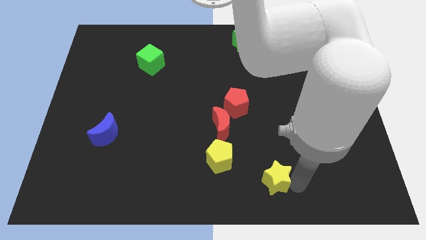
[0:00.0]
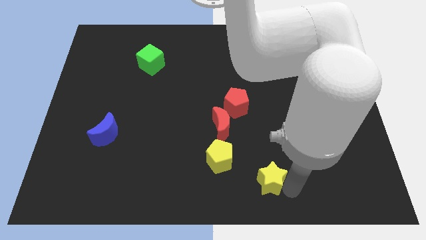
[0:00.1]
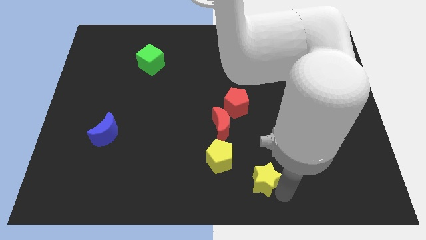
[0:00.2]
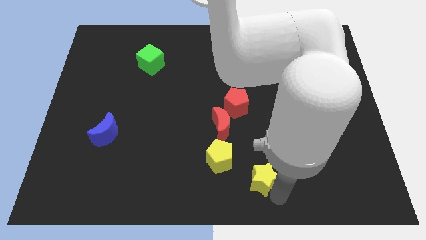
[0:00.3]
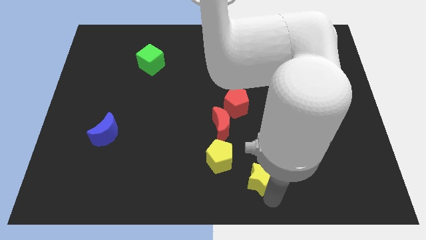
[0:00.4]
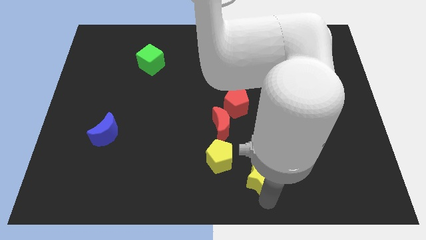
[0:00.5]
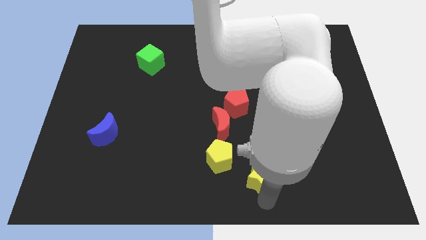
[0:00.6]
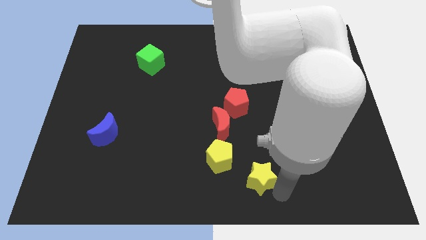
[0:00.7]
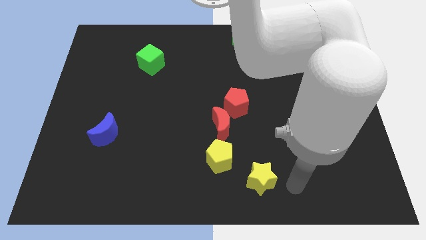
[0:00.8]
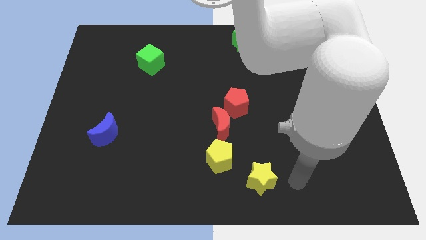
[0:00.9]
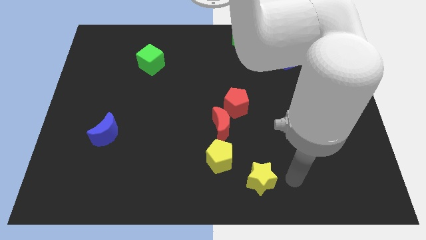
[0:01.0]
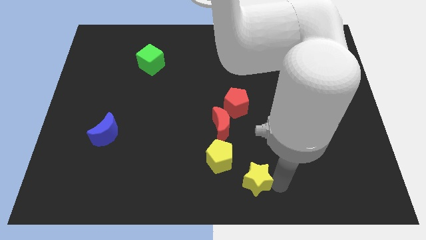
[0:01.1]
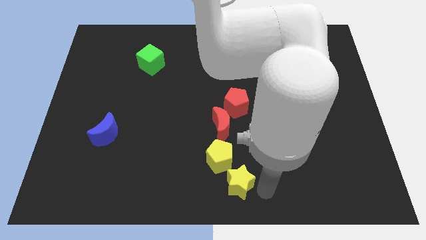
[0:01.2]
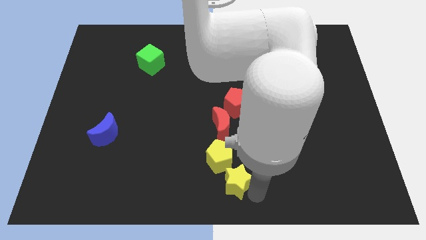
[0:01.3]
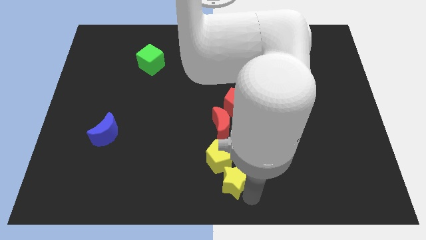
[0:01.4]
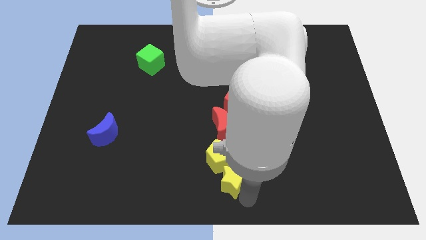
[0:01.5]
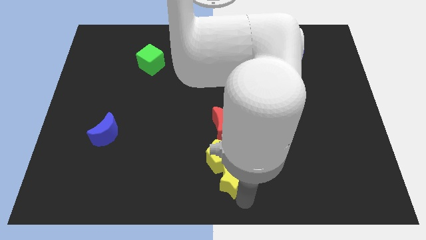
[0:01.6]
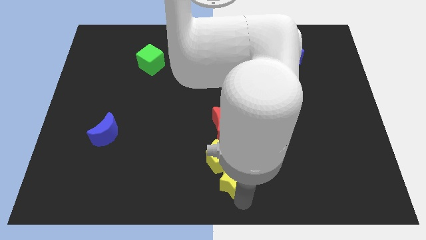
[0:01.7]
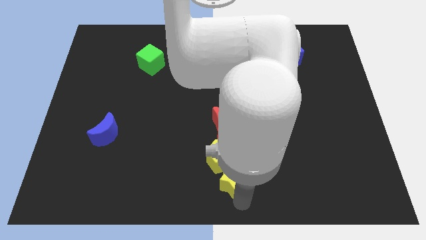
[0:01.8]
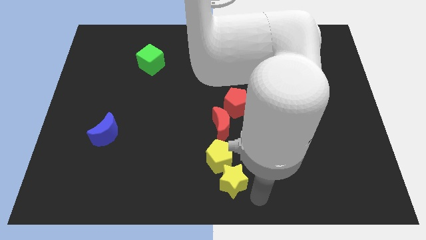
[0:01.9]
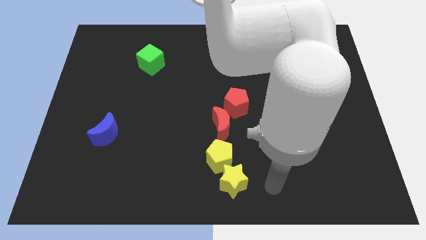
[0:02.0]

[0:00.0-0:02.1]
move the yellow star towards the bottom center of the board
